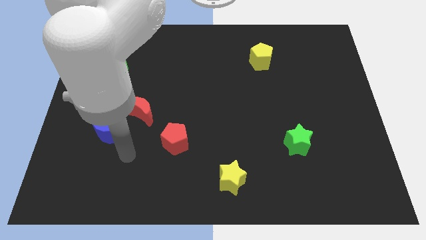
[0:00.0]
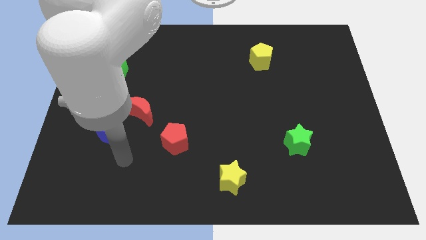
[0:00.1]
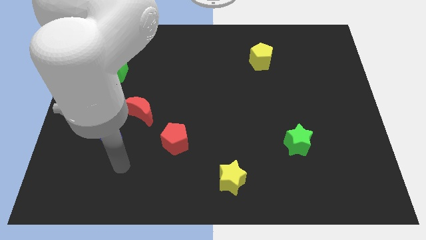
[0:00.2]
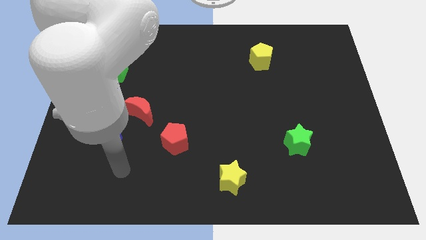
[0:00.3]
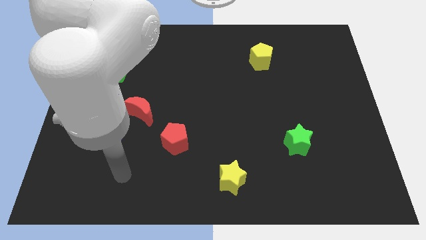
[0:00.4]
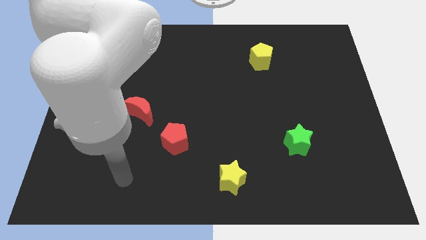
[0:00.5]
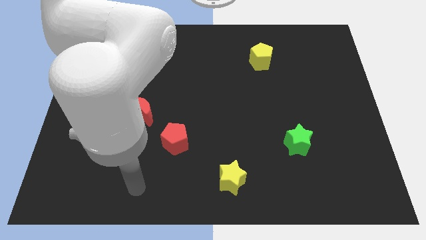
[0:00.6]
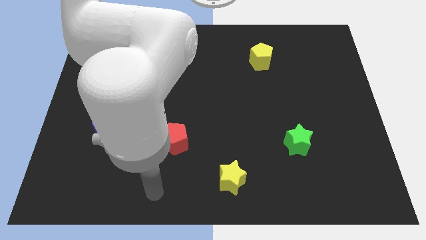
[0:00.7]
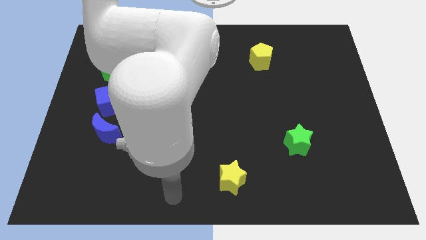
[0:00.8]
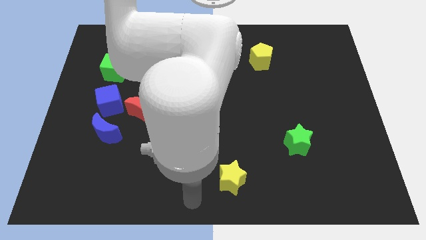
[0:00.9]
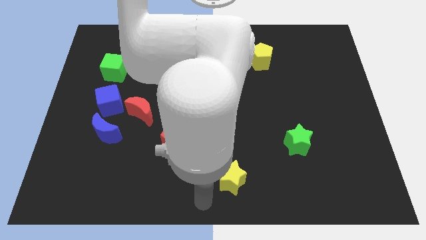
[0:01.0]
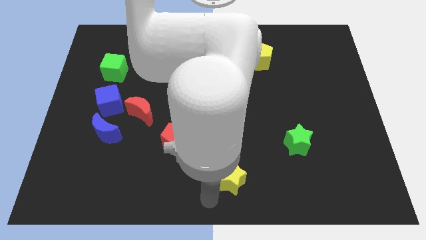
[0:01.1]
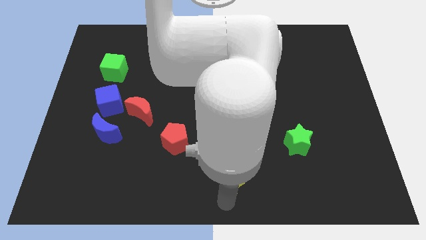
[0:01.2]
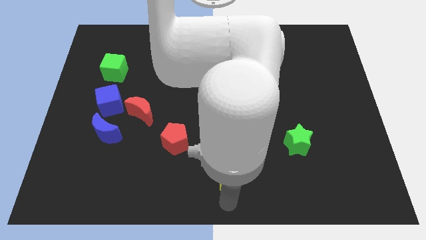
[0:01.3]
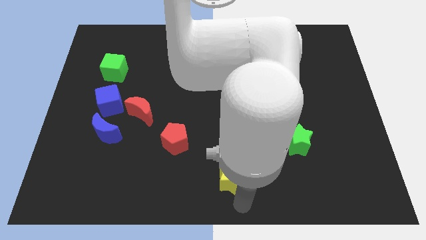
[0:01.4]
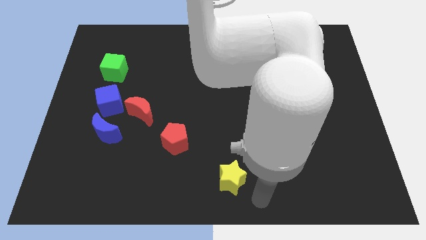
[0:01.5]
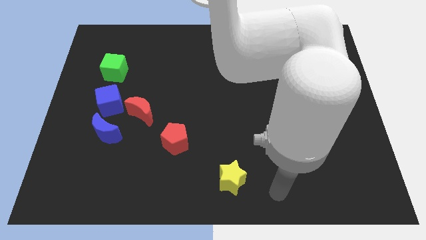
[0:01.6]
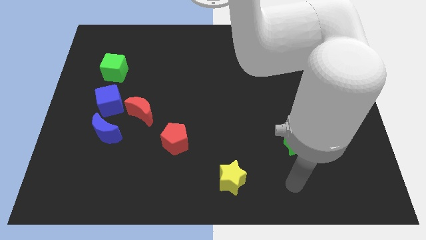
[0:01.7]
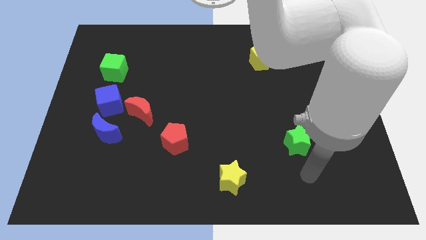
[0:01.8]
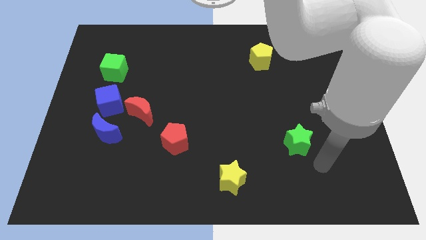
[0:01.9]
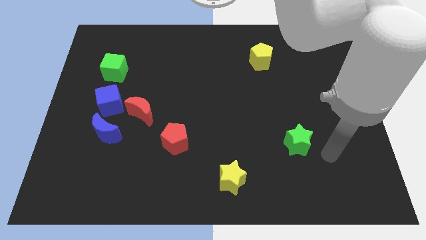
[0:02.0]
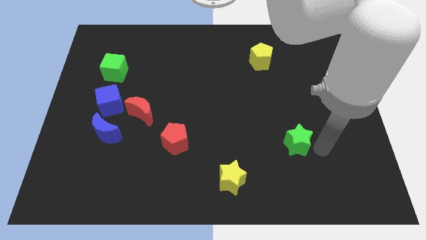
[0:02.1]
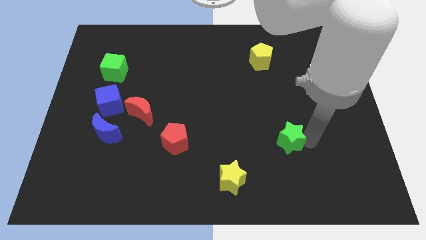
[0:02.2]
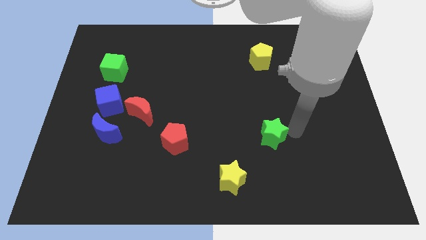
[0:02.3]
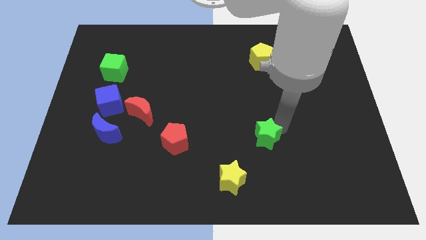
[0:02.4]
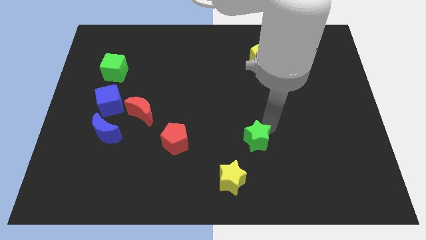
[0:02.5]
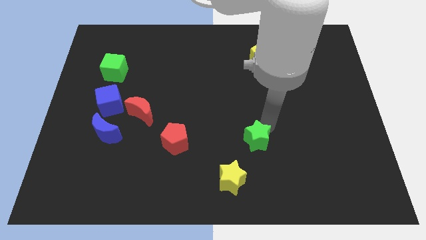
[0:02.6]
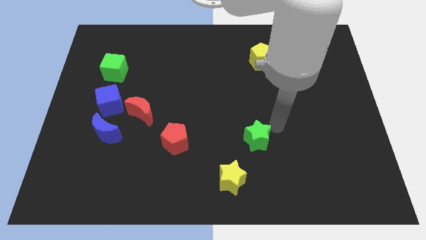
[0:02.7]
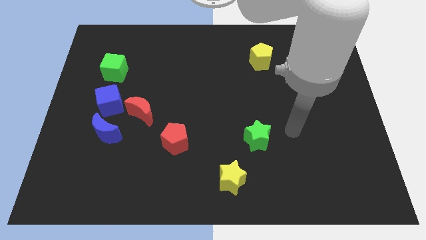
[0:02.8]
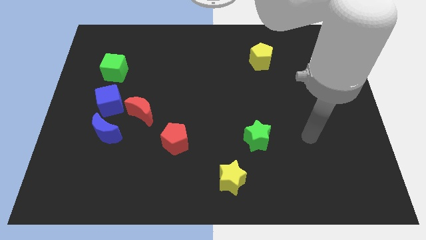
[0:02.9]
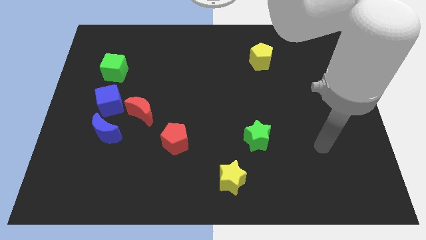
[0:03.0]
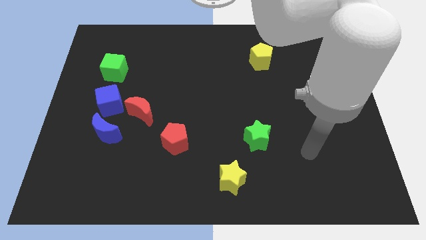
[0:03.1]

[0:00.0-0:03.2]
push the green star to the left side

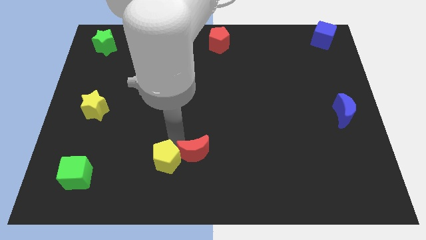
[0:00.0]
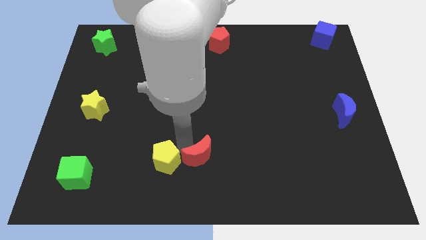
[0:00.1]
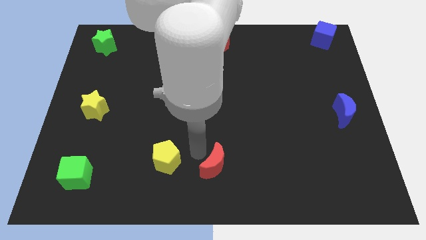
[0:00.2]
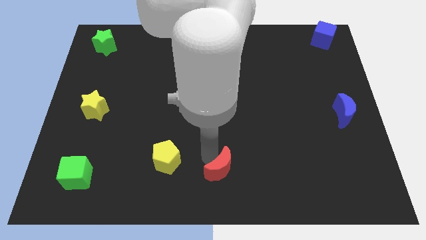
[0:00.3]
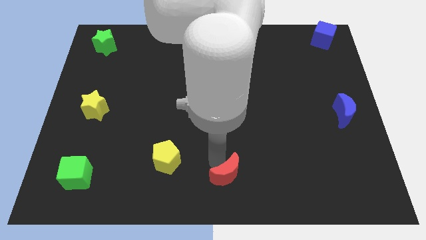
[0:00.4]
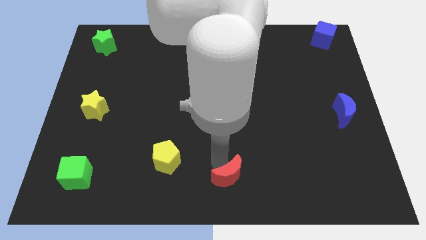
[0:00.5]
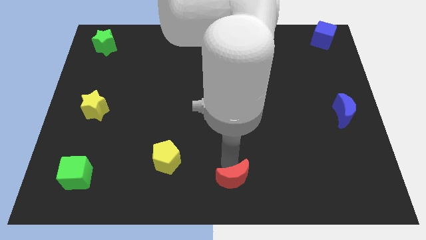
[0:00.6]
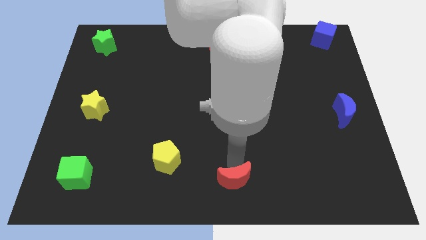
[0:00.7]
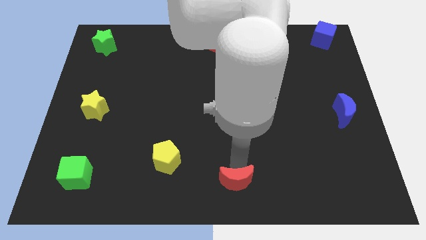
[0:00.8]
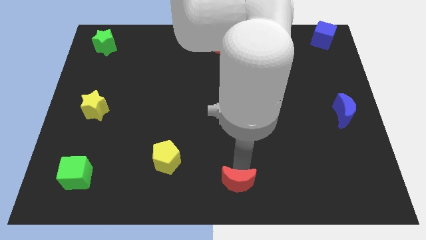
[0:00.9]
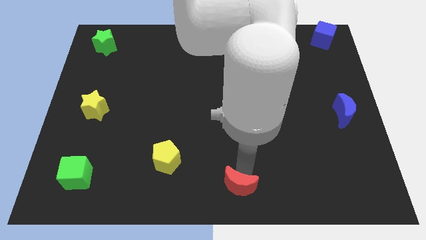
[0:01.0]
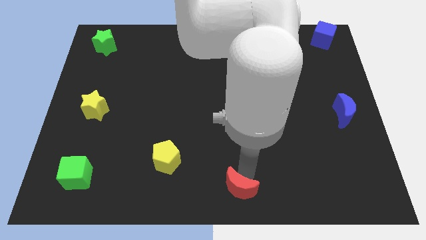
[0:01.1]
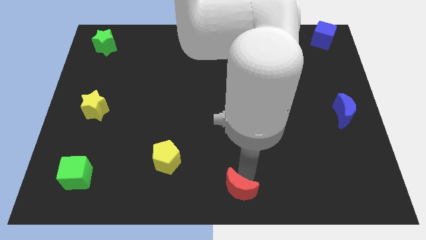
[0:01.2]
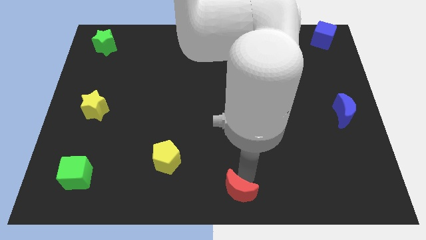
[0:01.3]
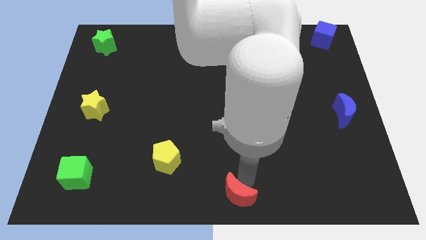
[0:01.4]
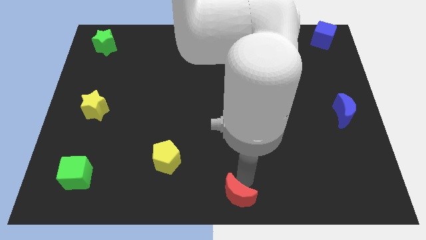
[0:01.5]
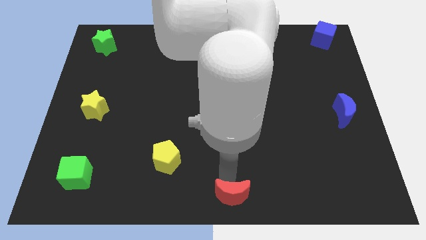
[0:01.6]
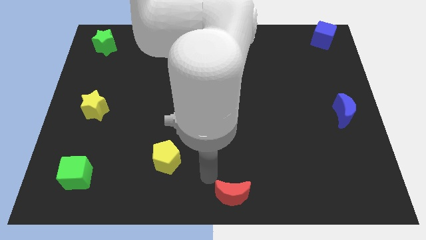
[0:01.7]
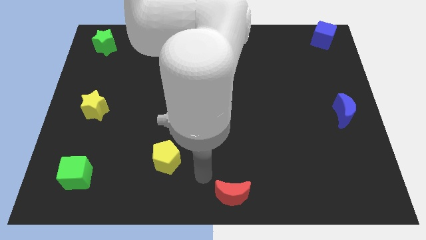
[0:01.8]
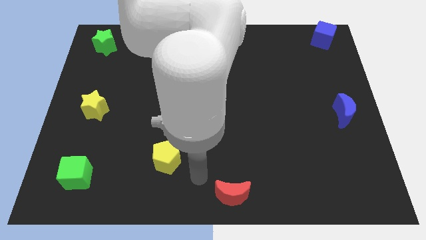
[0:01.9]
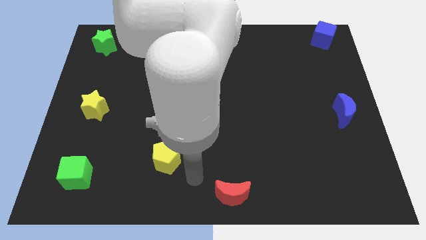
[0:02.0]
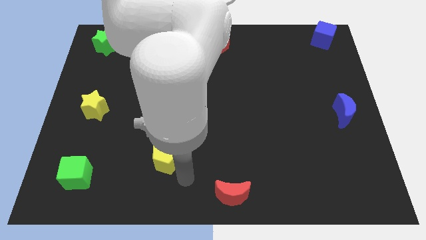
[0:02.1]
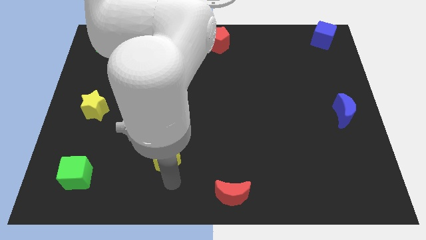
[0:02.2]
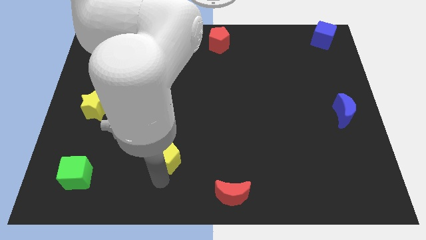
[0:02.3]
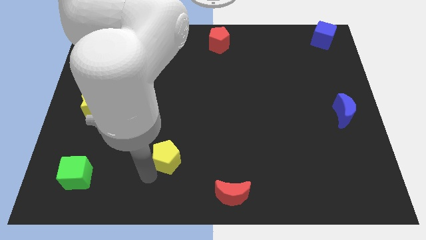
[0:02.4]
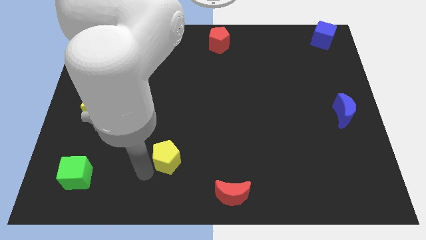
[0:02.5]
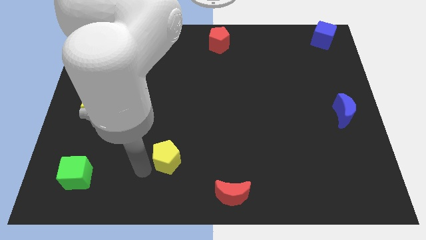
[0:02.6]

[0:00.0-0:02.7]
separate the red moon from the yellow pentagon

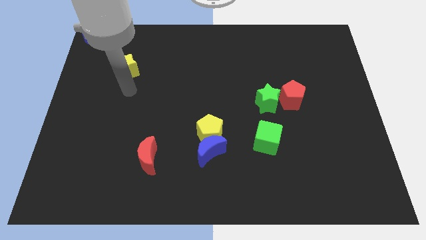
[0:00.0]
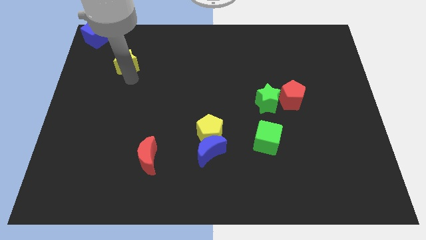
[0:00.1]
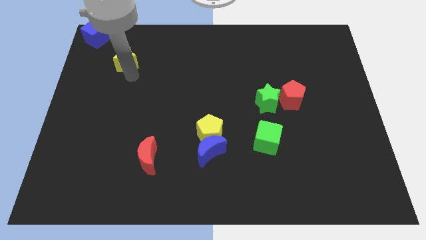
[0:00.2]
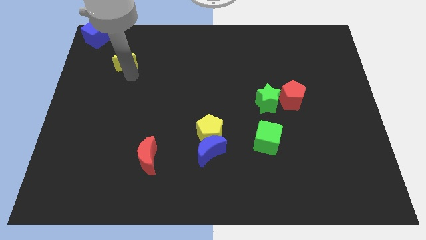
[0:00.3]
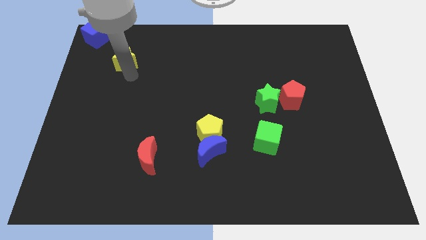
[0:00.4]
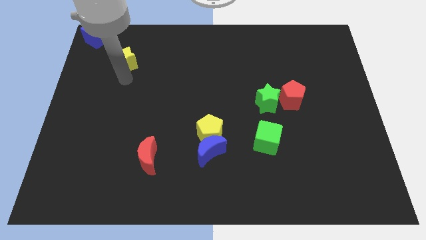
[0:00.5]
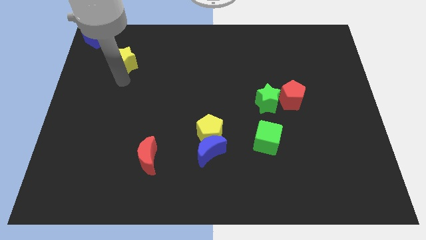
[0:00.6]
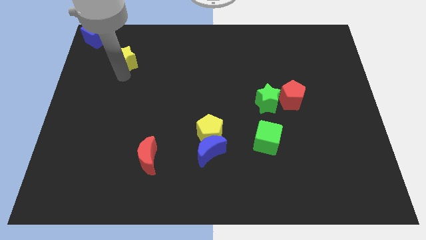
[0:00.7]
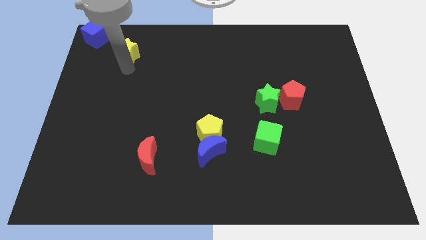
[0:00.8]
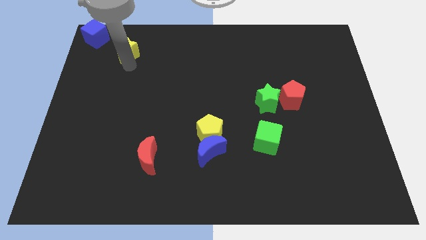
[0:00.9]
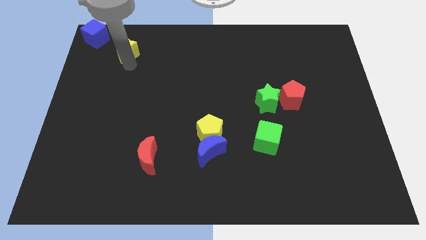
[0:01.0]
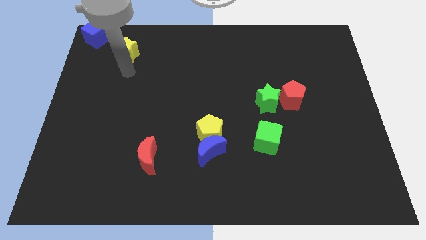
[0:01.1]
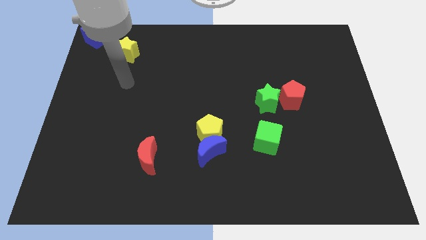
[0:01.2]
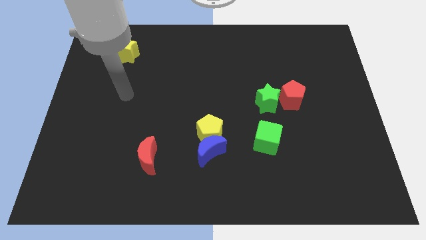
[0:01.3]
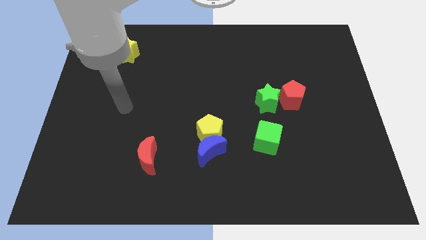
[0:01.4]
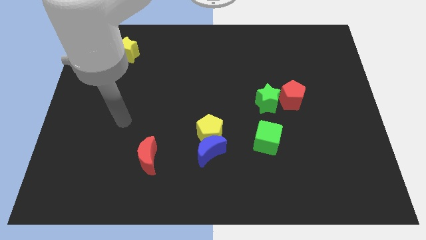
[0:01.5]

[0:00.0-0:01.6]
place yellow star to the bottom right of the blue block

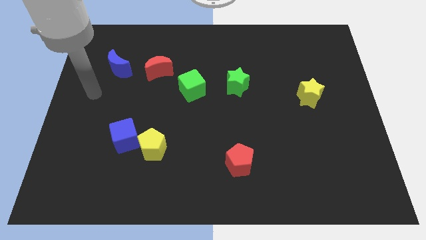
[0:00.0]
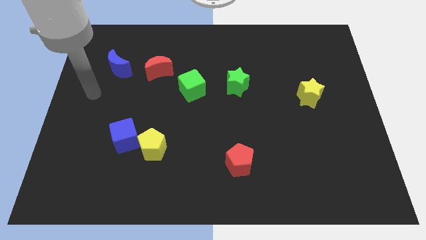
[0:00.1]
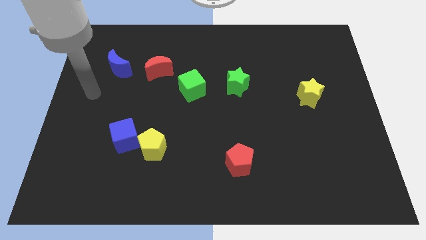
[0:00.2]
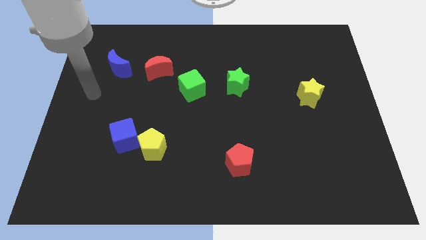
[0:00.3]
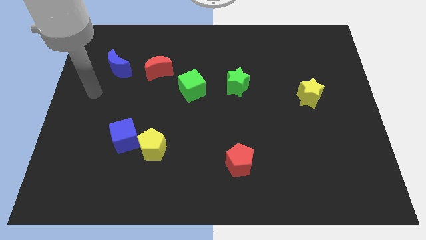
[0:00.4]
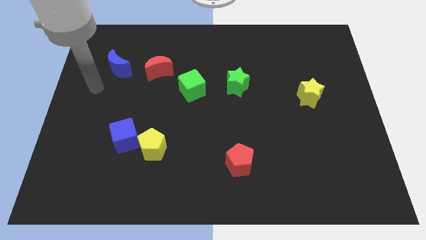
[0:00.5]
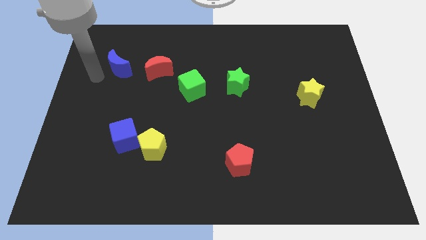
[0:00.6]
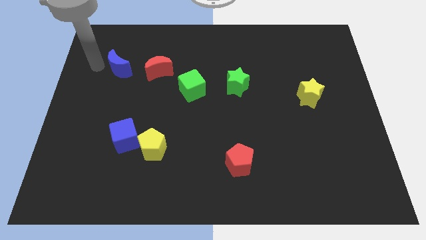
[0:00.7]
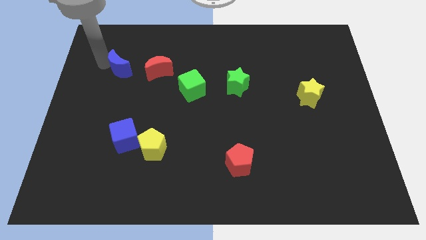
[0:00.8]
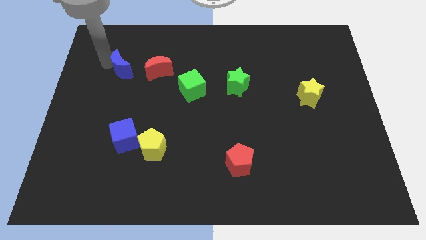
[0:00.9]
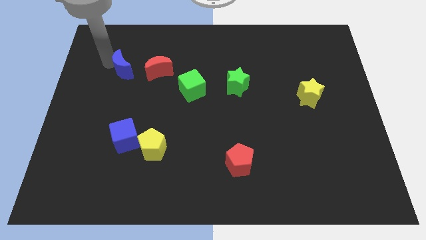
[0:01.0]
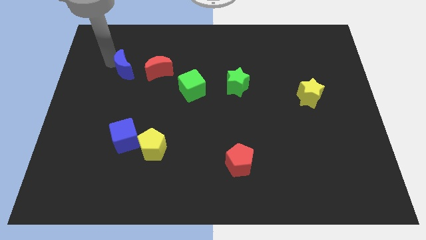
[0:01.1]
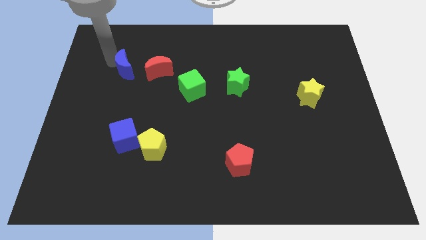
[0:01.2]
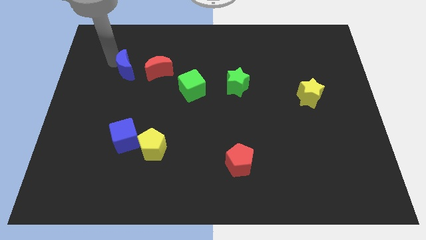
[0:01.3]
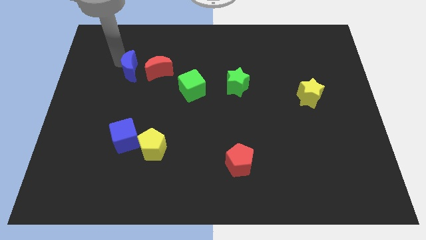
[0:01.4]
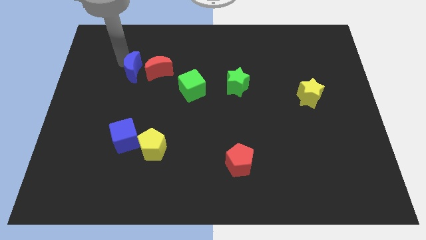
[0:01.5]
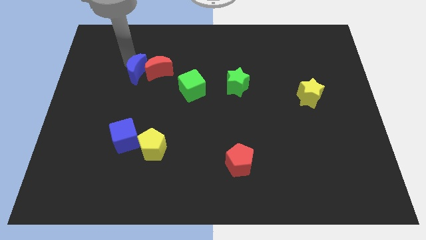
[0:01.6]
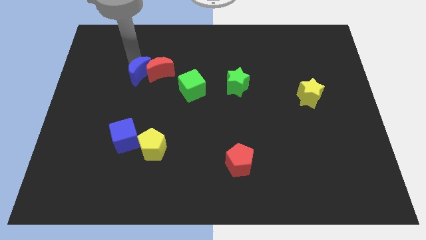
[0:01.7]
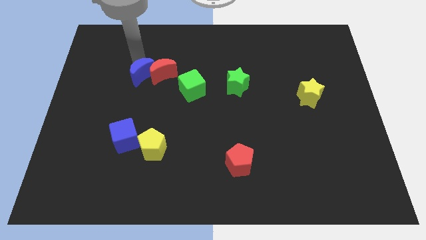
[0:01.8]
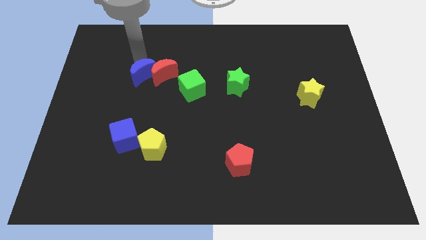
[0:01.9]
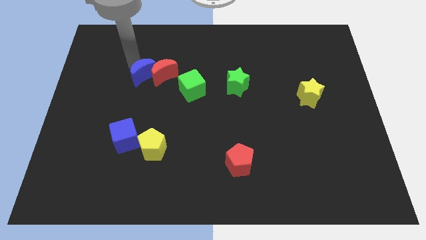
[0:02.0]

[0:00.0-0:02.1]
push blue moon into red moon
